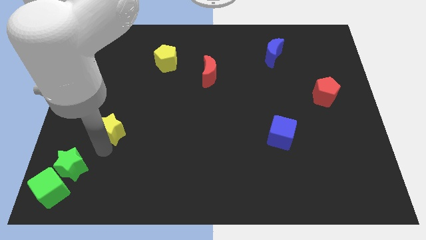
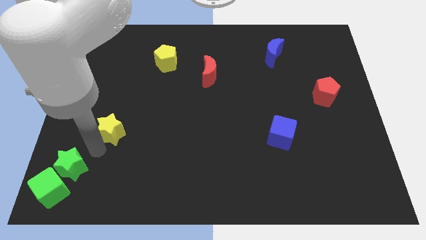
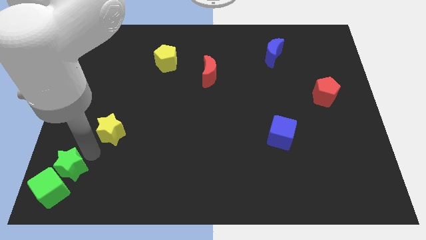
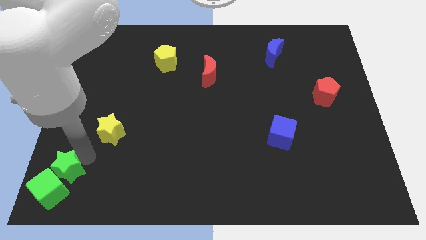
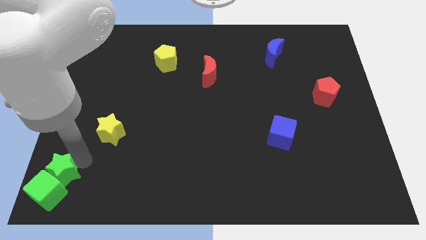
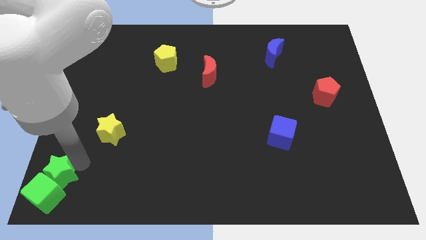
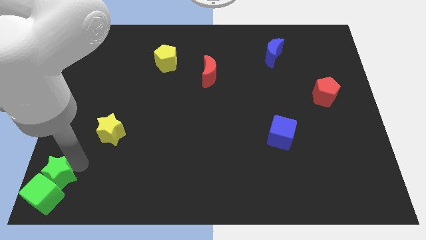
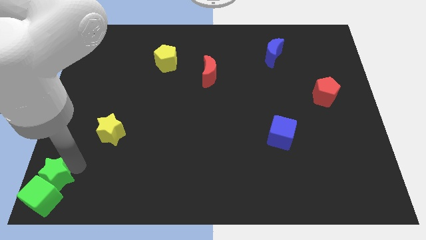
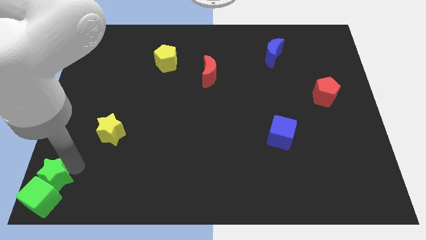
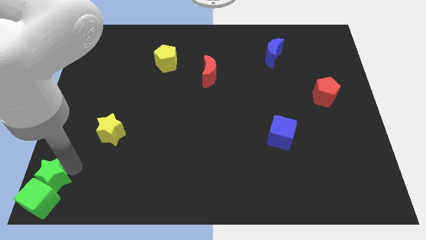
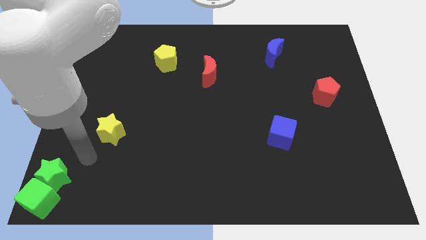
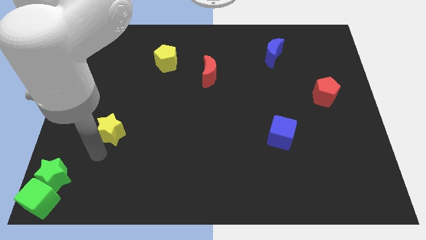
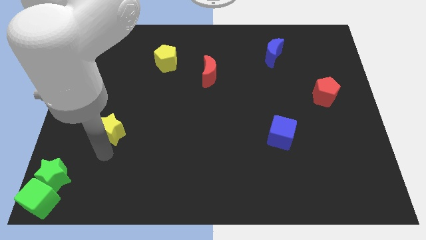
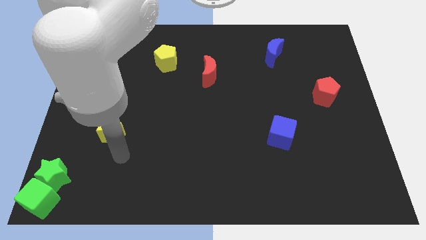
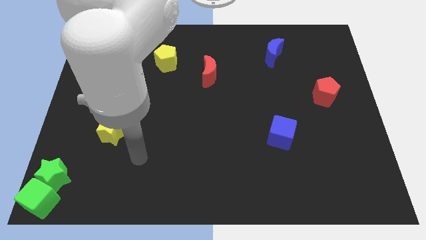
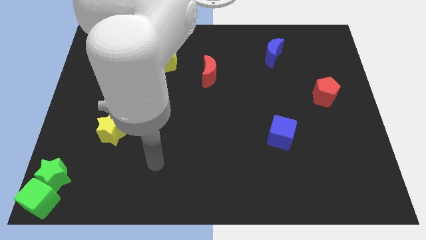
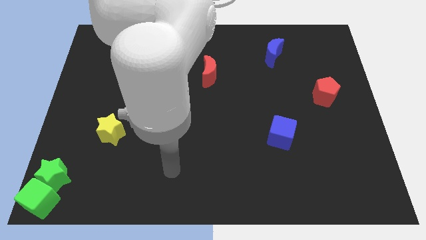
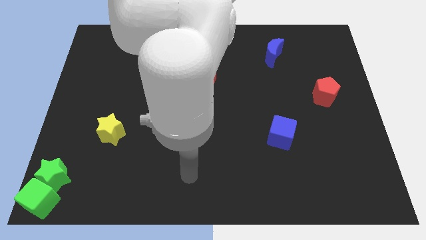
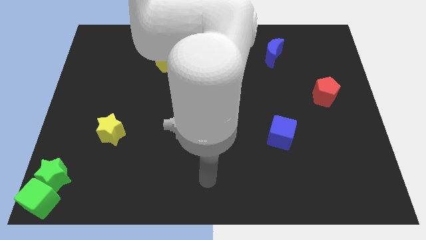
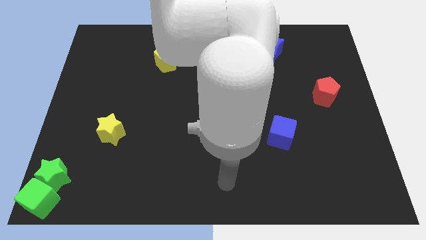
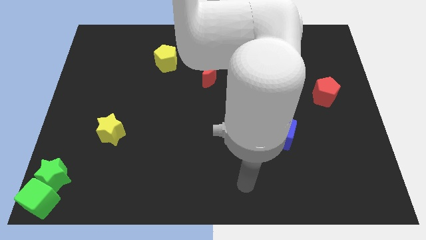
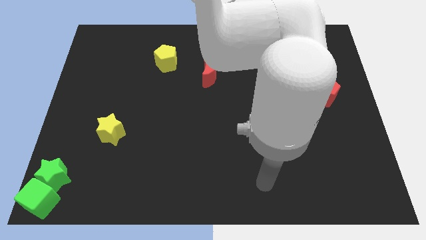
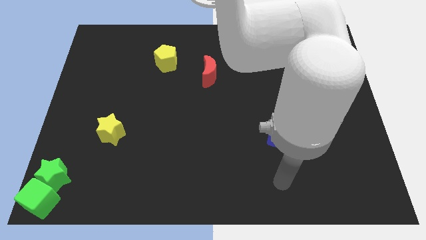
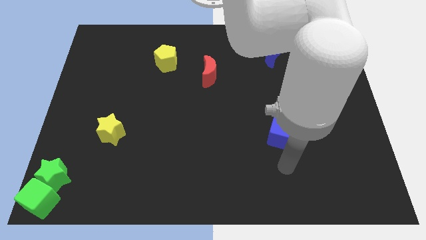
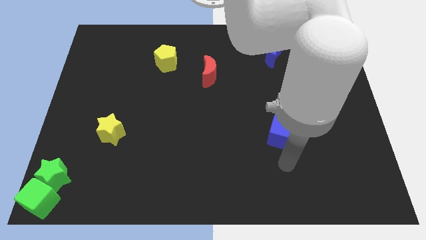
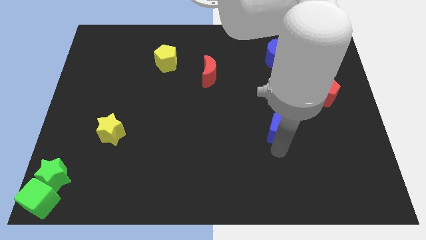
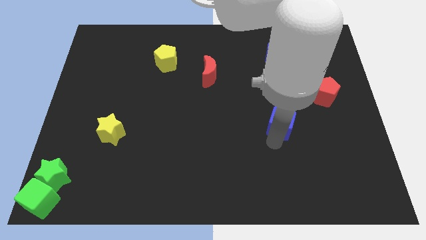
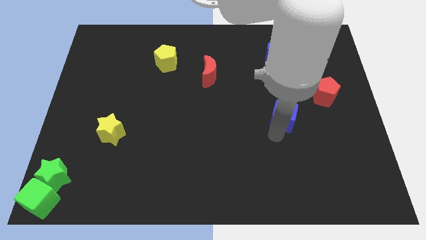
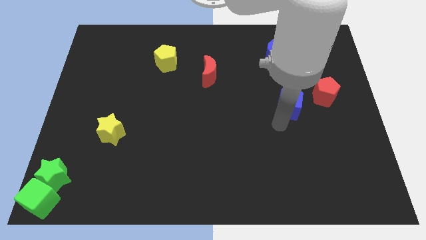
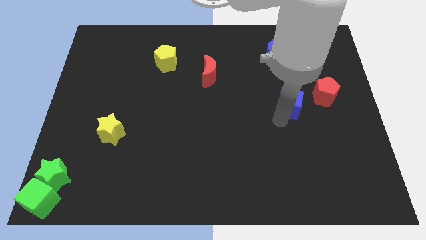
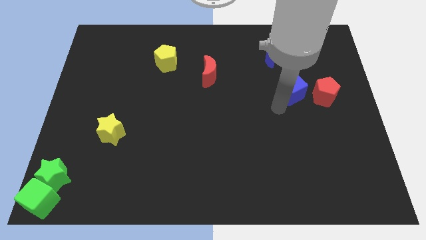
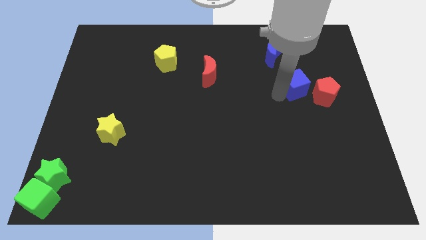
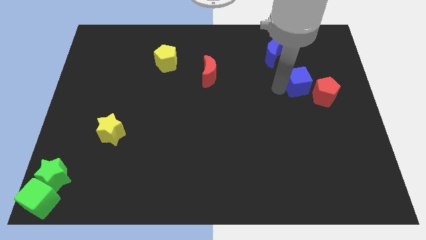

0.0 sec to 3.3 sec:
move the blue cube to the left of the red pentagon

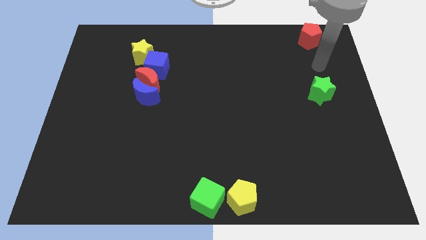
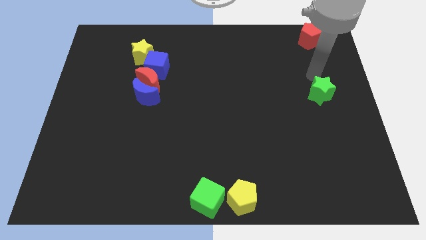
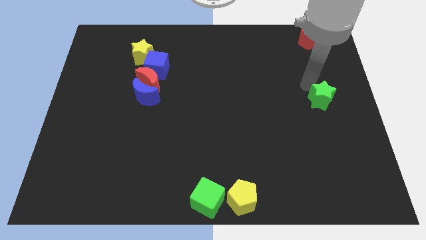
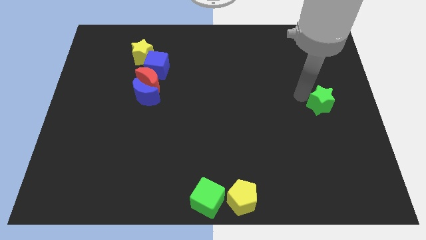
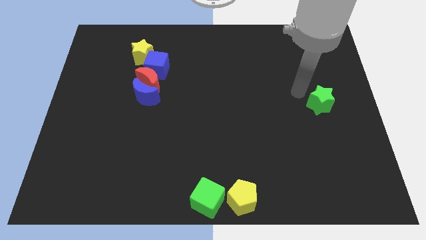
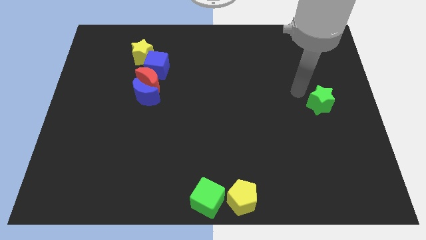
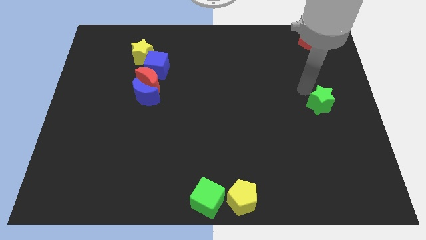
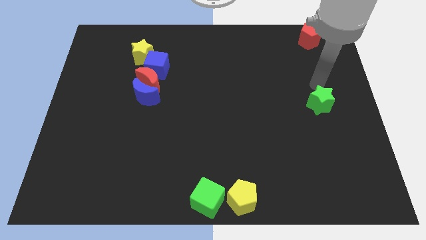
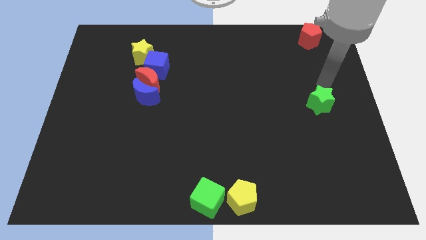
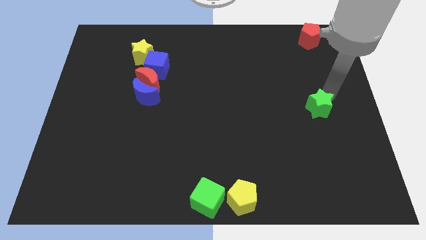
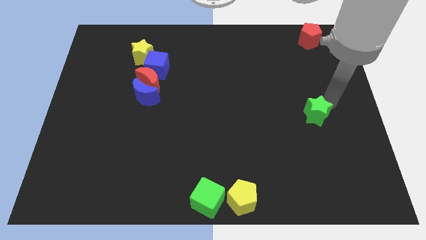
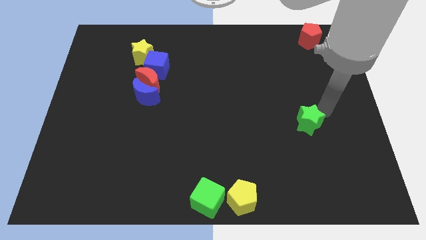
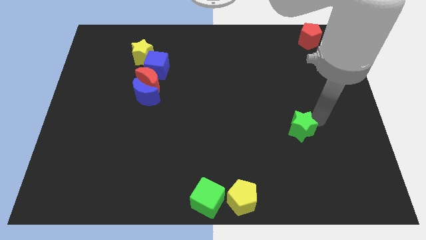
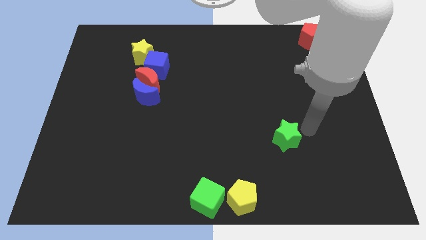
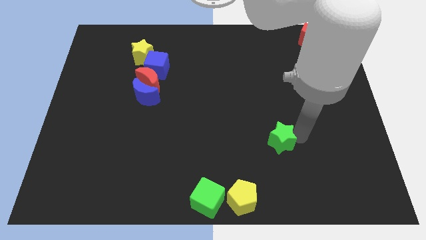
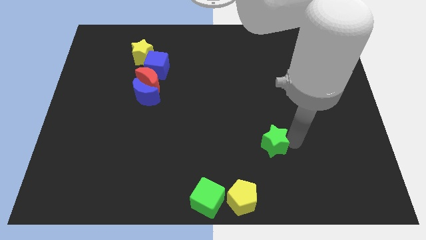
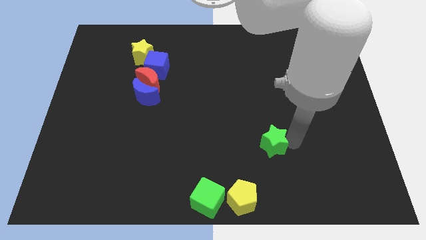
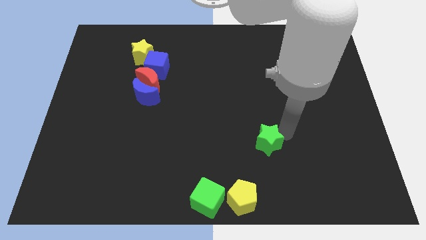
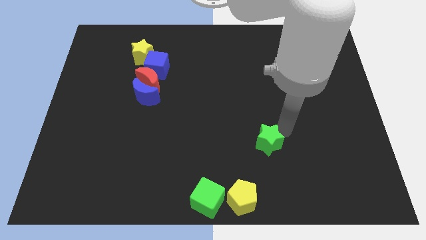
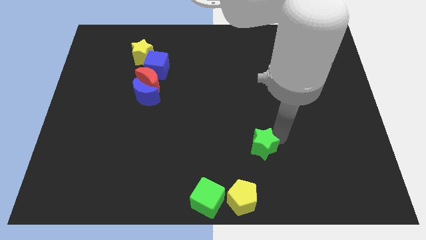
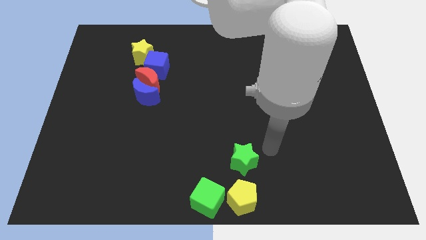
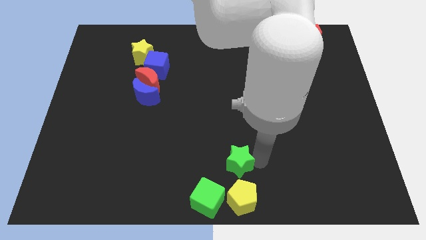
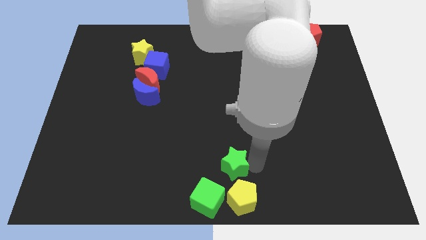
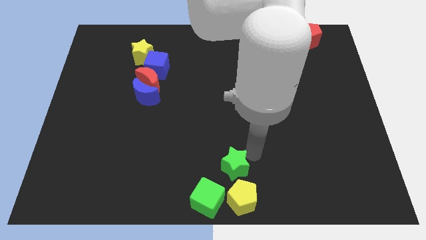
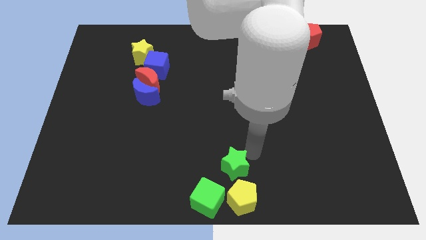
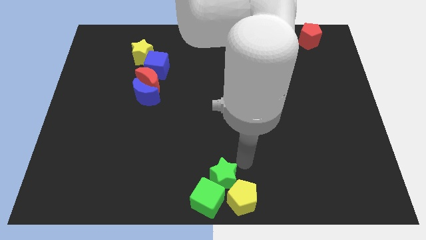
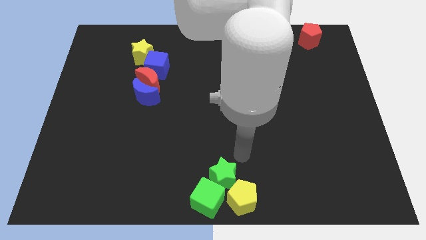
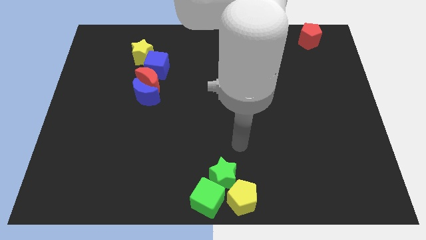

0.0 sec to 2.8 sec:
move the green star towards the top of the green cube

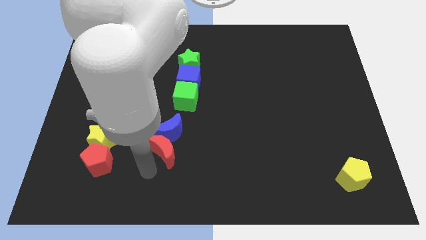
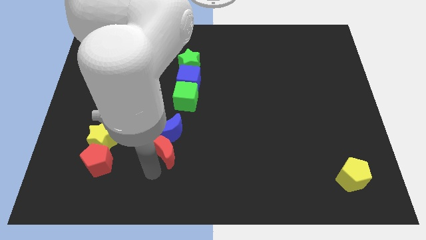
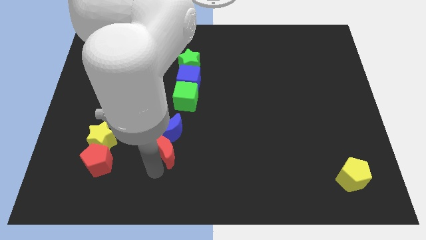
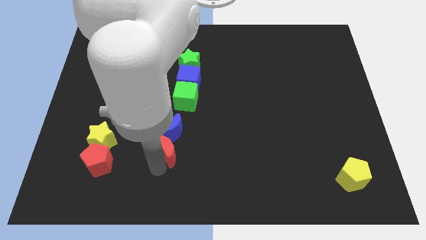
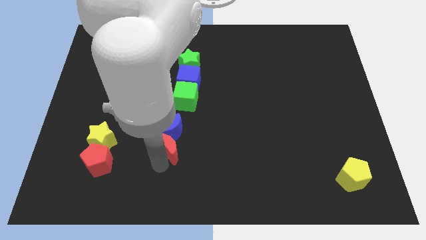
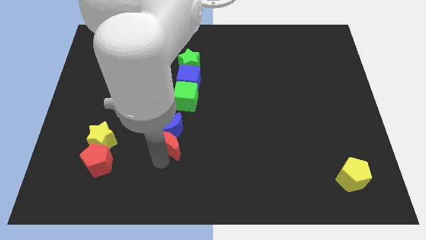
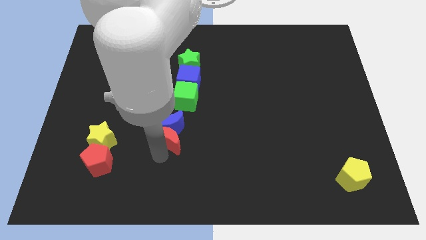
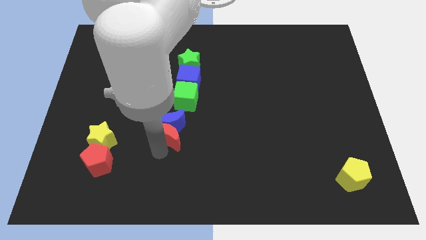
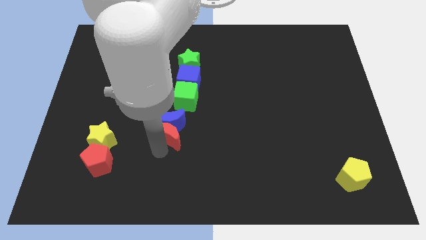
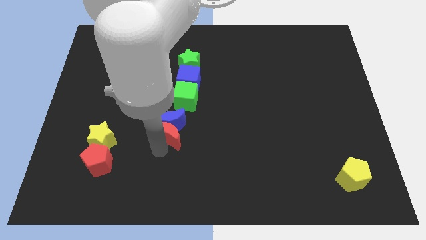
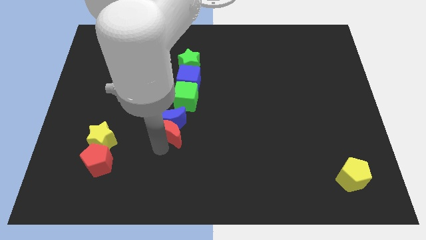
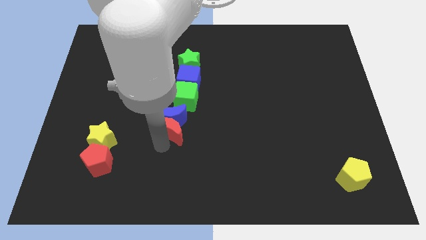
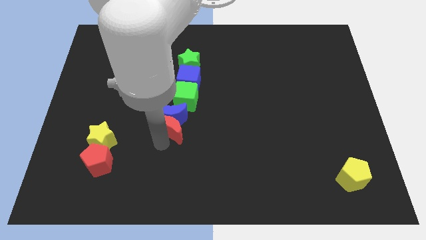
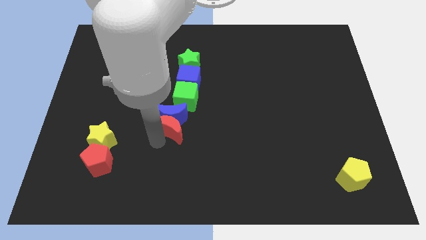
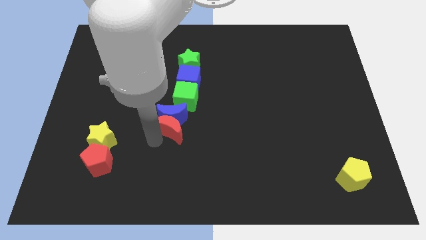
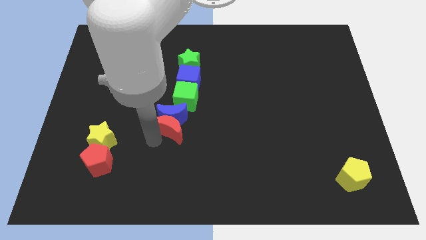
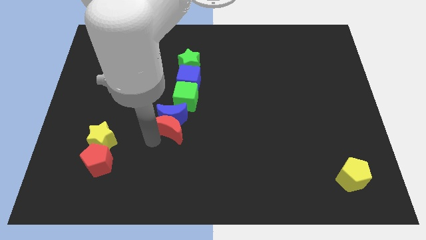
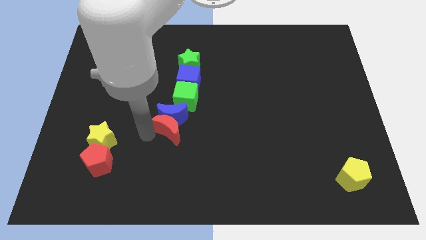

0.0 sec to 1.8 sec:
push red crescent along with blue crescent close to green cube

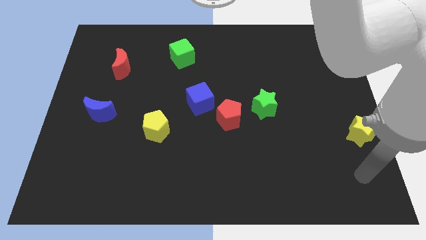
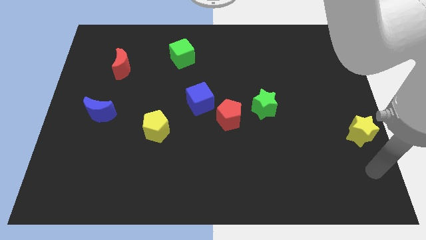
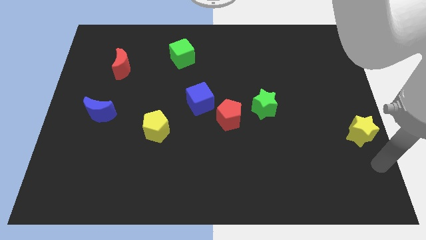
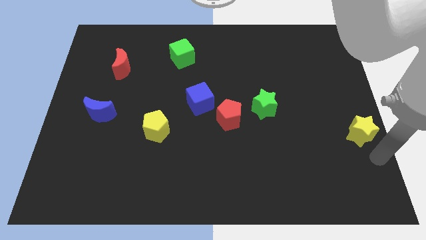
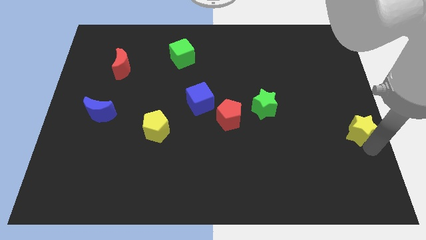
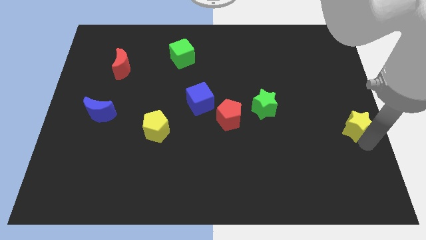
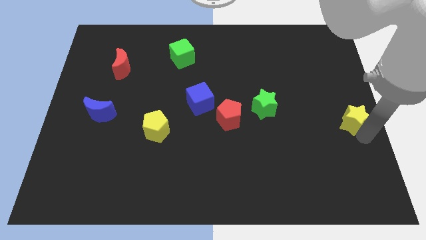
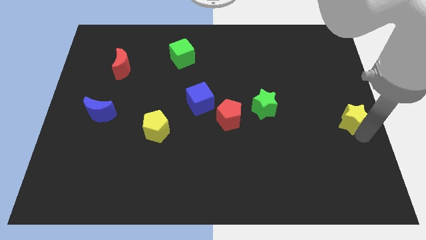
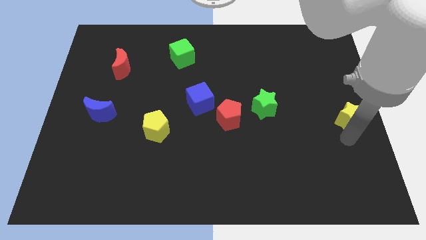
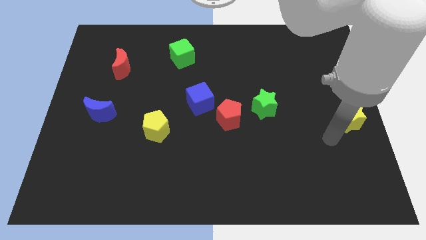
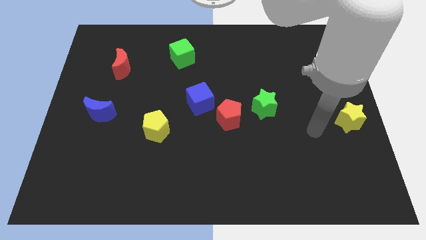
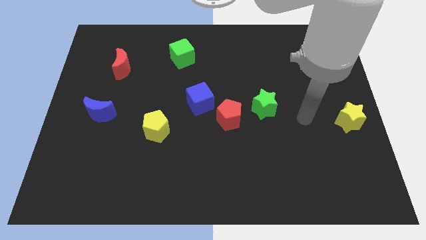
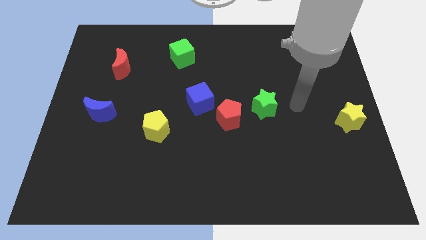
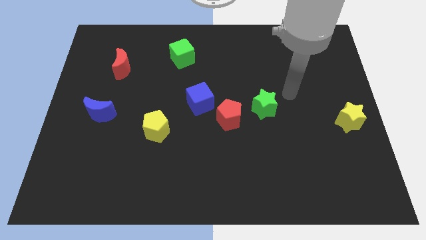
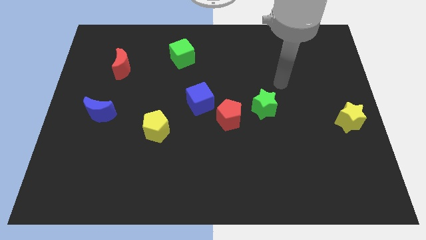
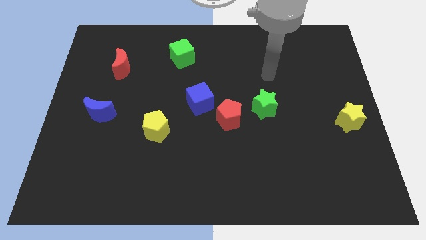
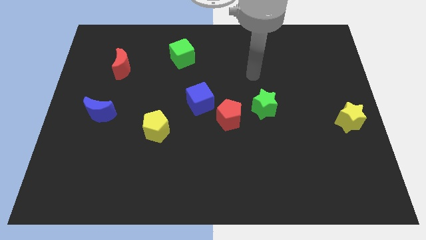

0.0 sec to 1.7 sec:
slightly move the yellow star towards top
